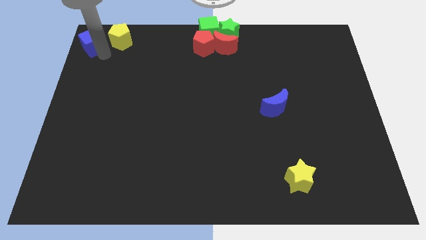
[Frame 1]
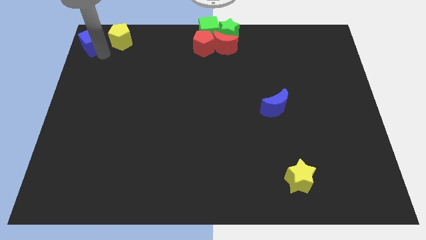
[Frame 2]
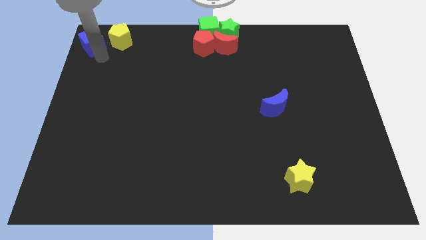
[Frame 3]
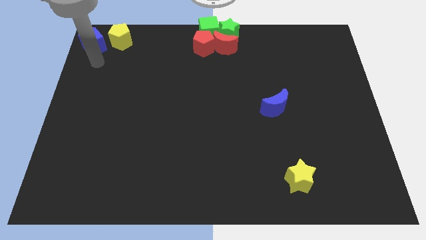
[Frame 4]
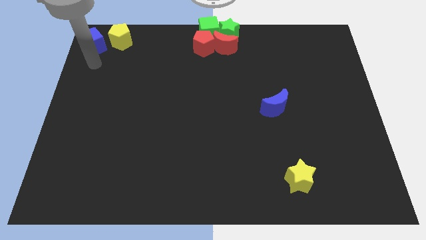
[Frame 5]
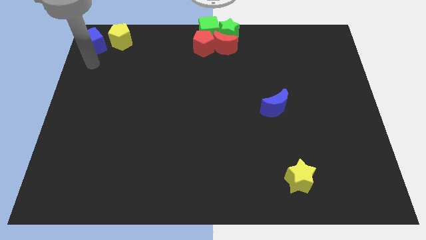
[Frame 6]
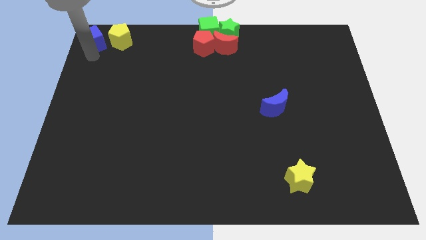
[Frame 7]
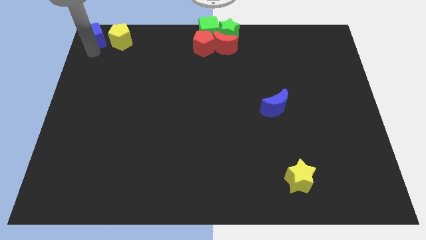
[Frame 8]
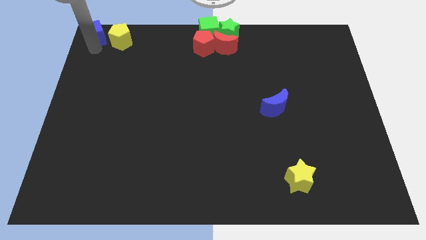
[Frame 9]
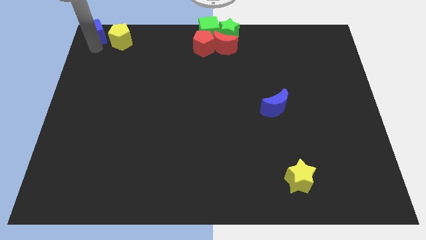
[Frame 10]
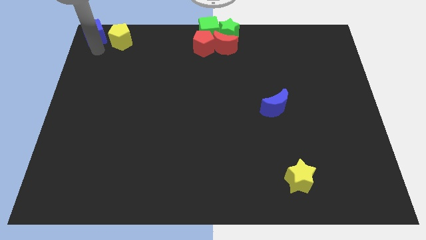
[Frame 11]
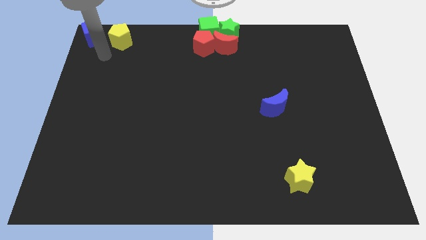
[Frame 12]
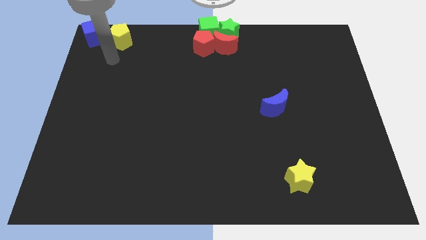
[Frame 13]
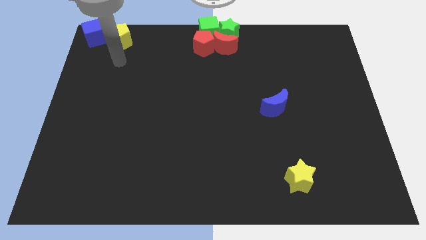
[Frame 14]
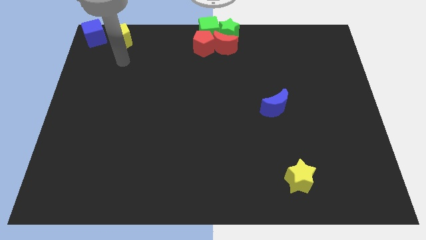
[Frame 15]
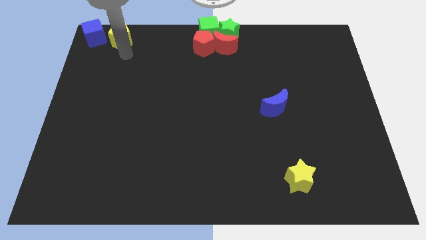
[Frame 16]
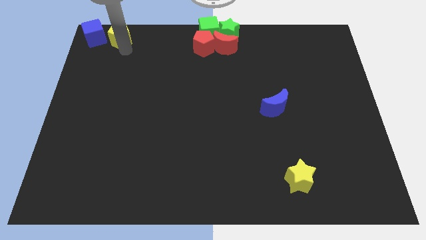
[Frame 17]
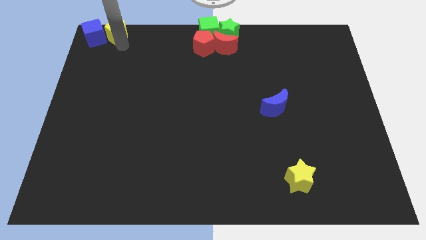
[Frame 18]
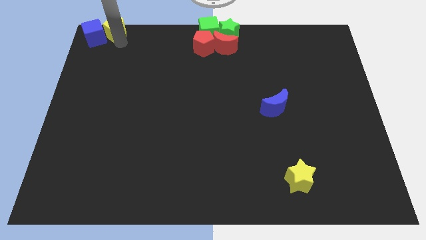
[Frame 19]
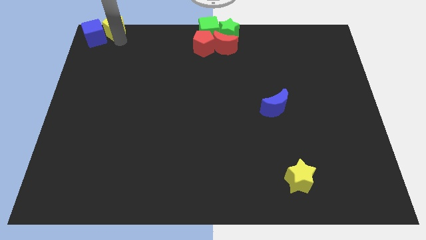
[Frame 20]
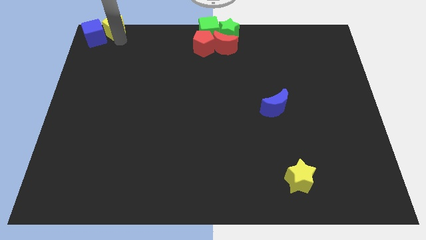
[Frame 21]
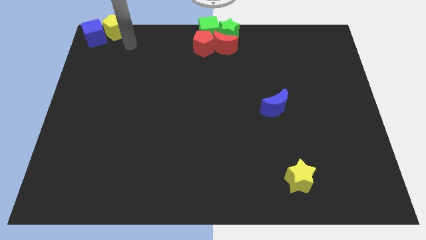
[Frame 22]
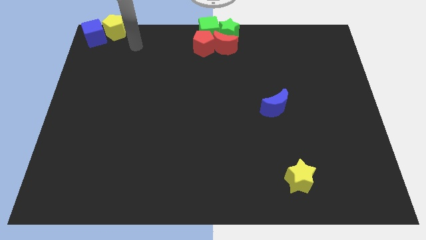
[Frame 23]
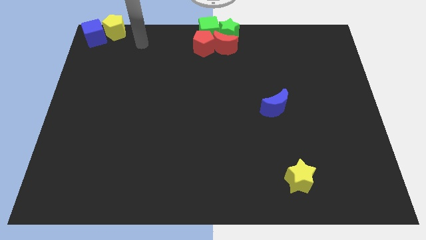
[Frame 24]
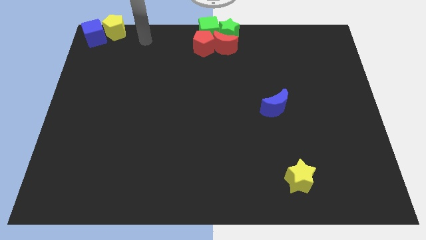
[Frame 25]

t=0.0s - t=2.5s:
move the yellow pentagon and blue cube towards the top left side of the board

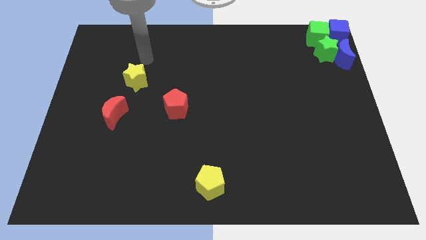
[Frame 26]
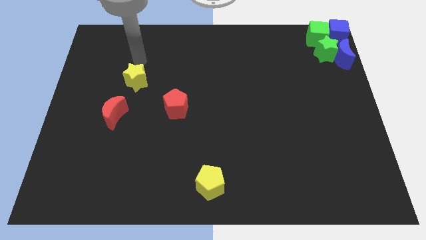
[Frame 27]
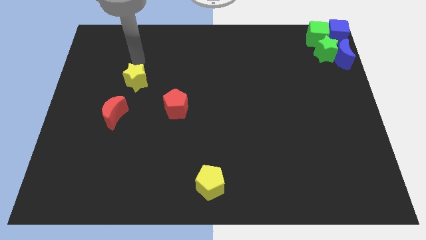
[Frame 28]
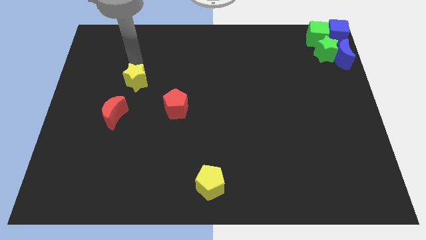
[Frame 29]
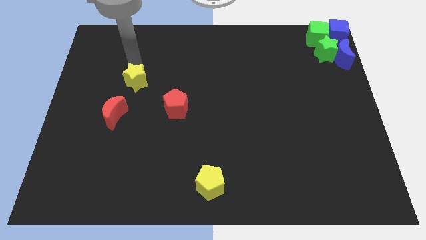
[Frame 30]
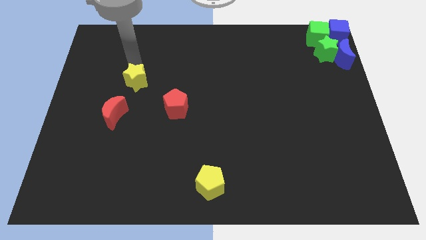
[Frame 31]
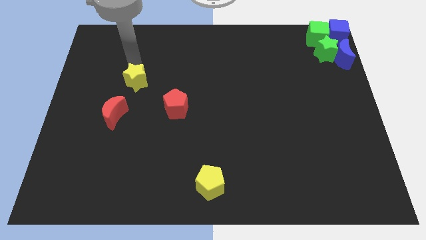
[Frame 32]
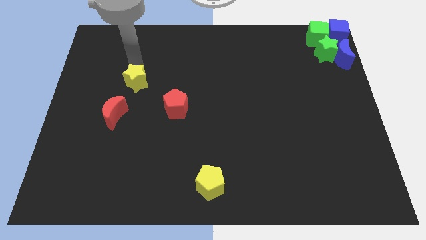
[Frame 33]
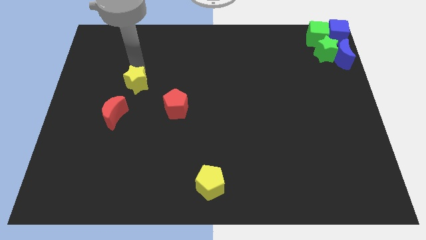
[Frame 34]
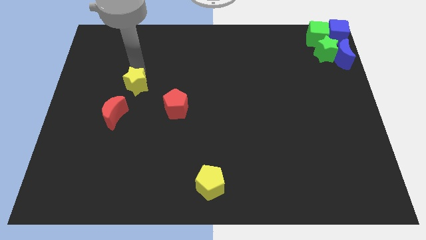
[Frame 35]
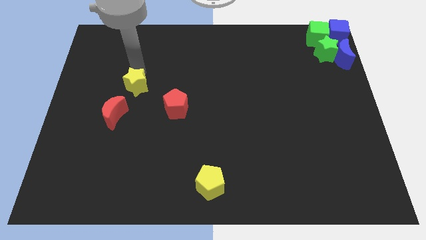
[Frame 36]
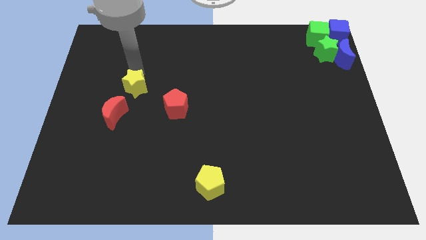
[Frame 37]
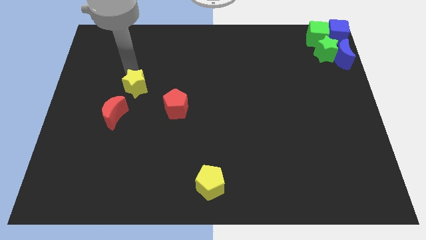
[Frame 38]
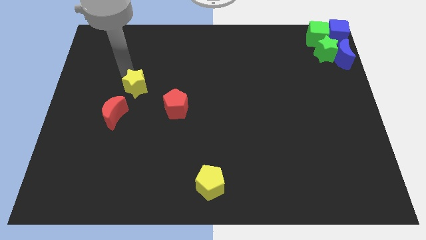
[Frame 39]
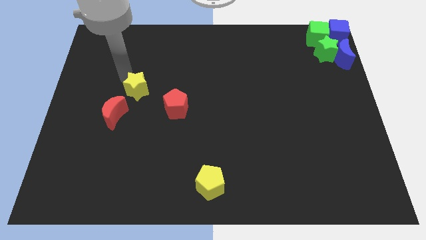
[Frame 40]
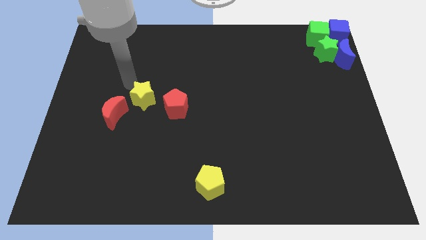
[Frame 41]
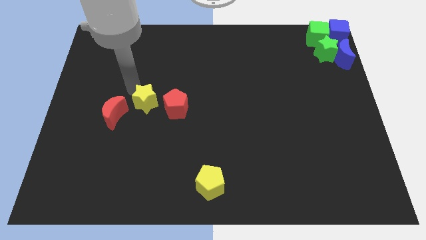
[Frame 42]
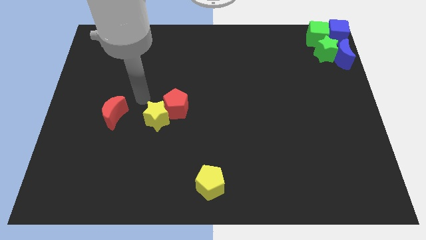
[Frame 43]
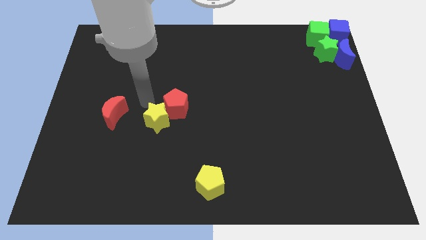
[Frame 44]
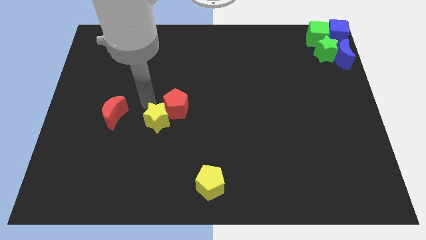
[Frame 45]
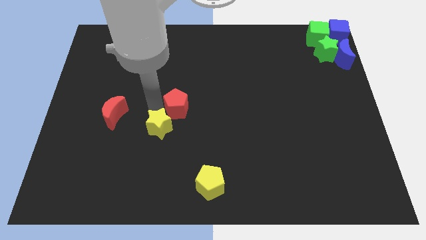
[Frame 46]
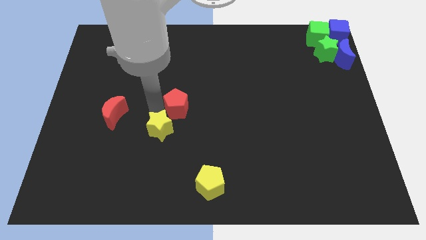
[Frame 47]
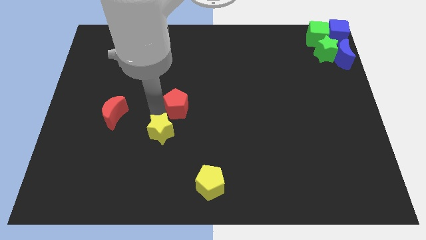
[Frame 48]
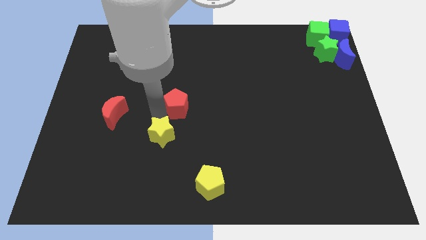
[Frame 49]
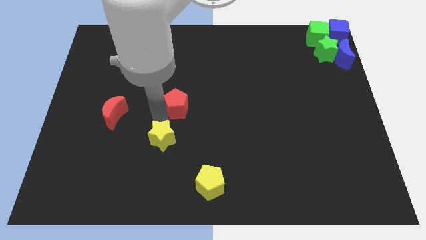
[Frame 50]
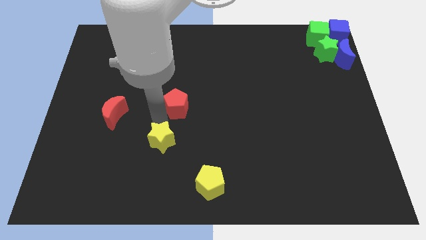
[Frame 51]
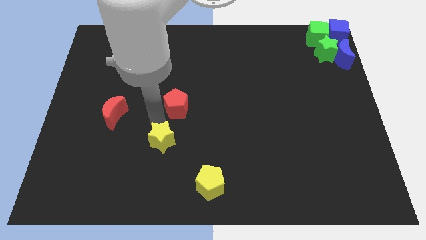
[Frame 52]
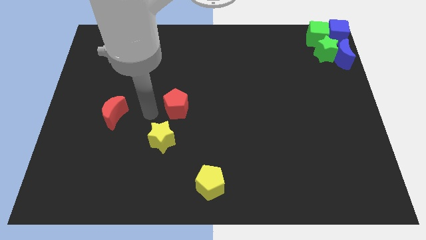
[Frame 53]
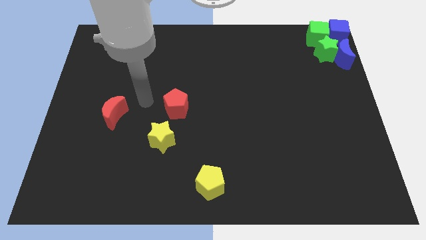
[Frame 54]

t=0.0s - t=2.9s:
push the yellow star to the bottom of the red pentagon

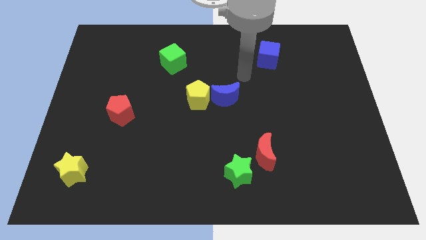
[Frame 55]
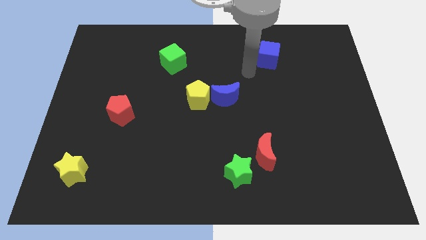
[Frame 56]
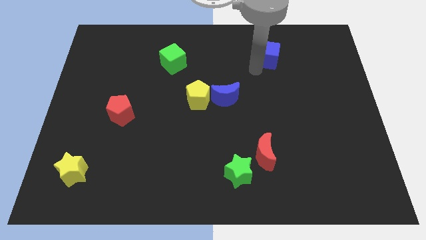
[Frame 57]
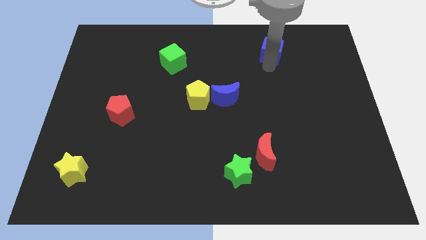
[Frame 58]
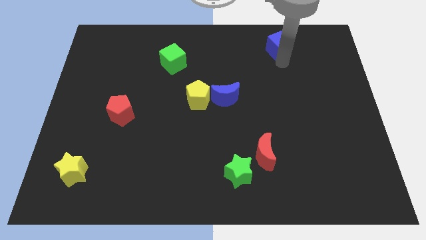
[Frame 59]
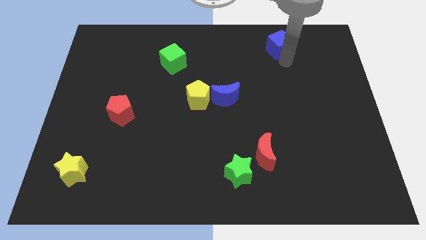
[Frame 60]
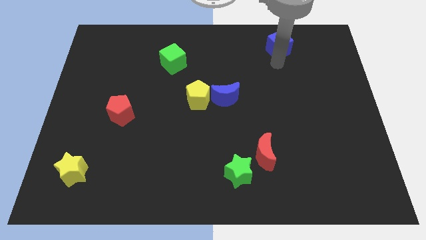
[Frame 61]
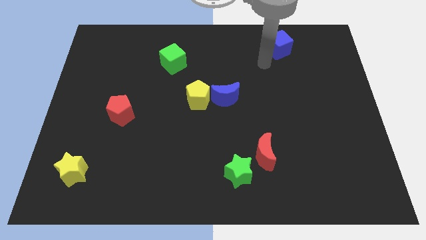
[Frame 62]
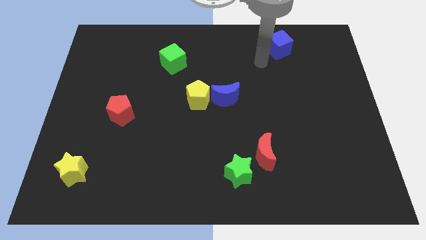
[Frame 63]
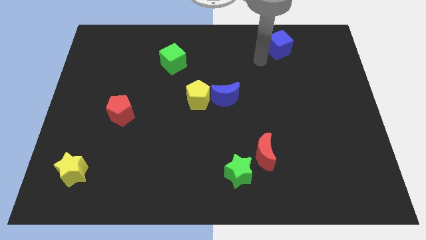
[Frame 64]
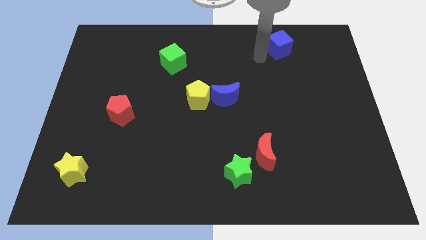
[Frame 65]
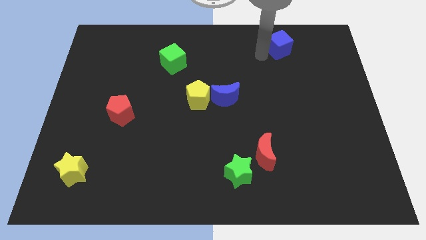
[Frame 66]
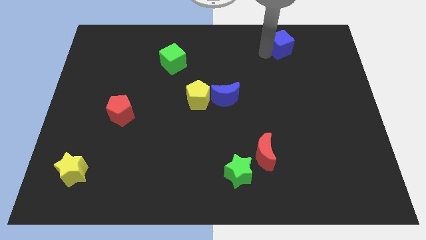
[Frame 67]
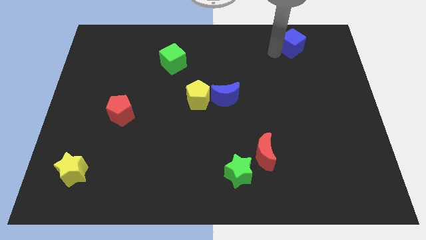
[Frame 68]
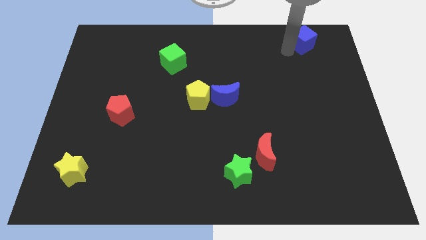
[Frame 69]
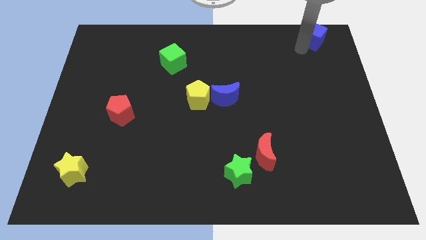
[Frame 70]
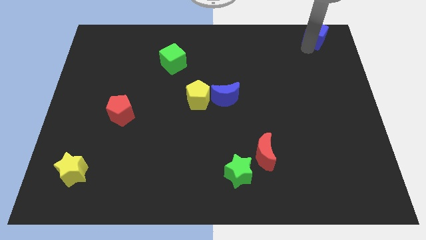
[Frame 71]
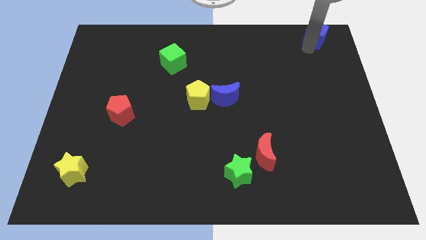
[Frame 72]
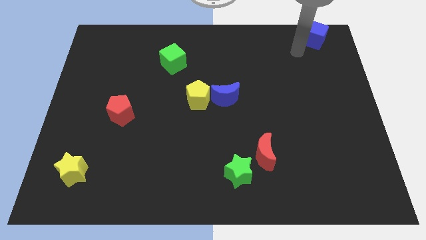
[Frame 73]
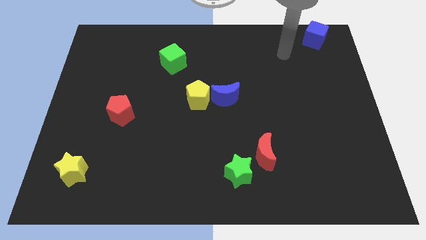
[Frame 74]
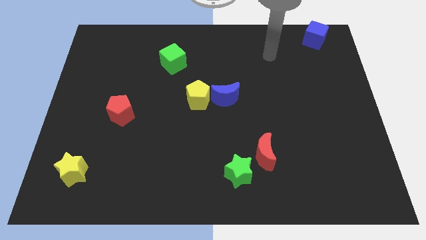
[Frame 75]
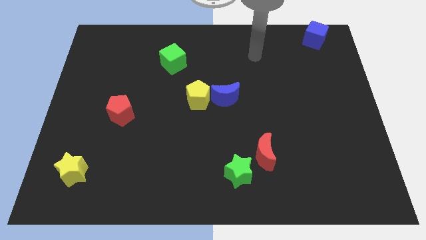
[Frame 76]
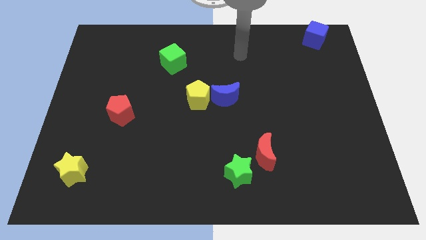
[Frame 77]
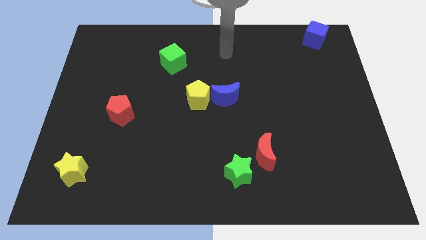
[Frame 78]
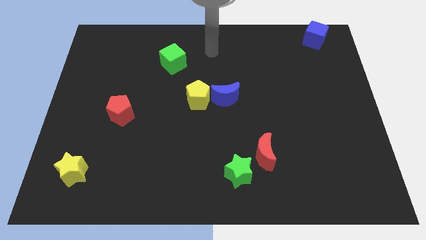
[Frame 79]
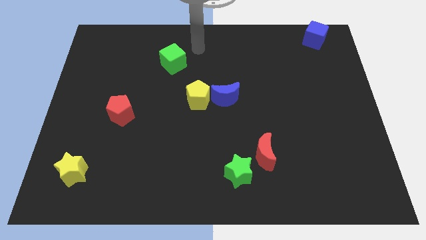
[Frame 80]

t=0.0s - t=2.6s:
move the blue cube to the top right side and move away

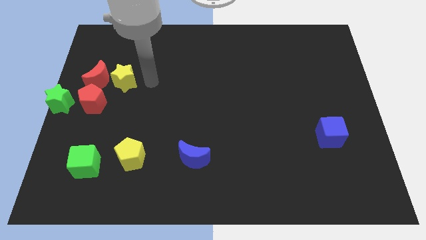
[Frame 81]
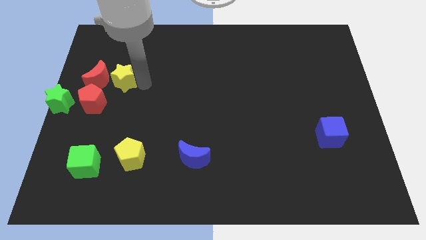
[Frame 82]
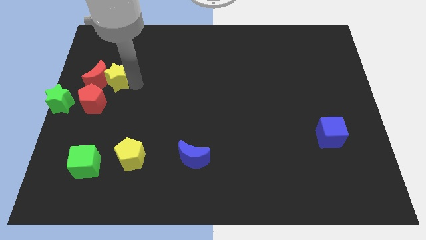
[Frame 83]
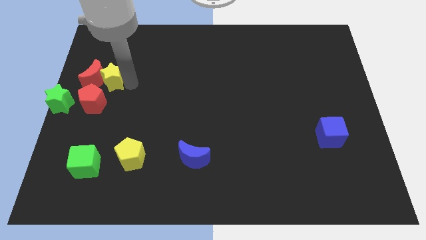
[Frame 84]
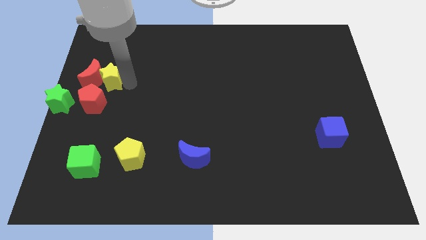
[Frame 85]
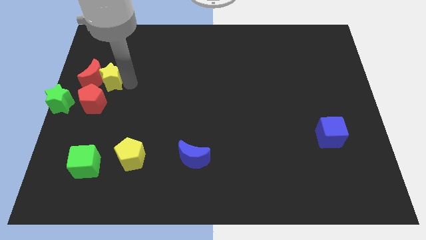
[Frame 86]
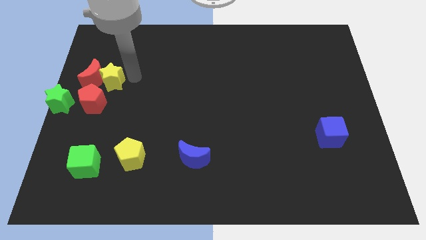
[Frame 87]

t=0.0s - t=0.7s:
slide the red crescent towards the right side with the help of yellow star

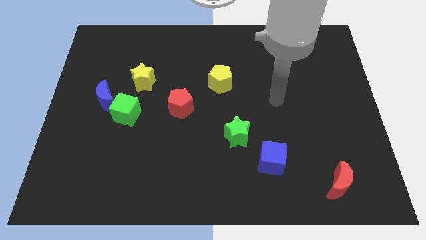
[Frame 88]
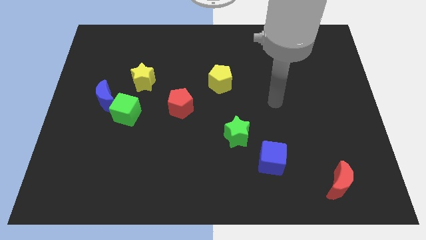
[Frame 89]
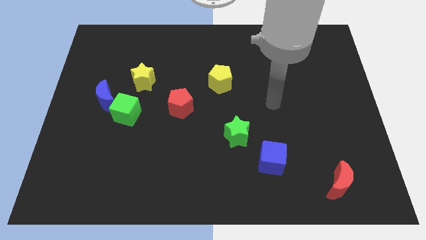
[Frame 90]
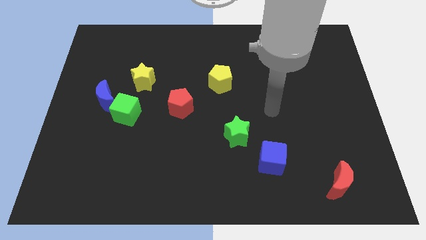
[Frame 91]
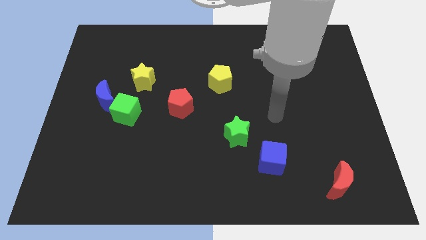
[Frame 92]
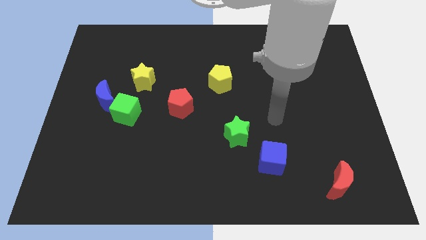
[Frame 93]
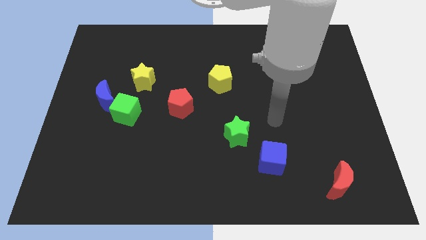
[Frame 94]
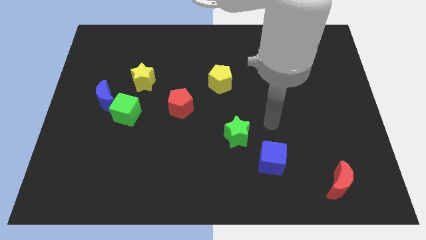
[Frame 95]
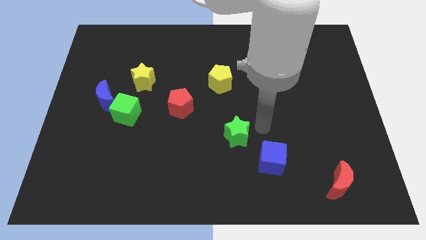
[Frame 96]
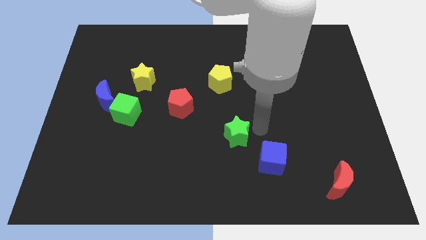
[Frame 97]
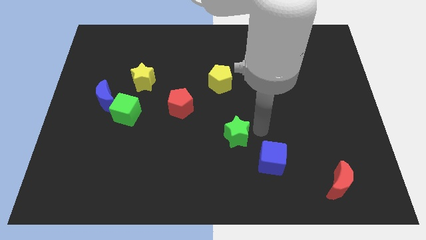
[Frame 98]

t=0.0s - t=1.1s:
move your arm to the right of green star
